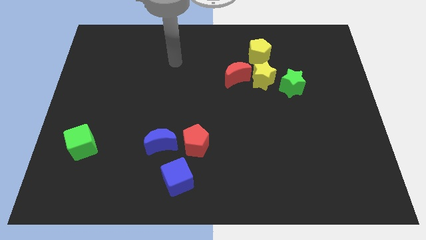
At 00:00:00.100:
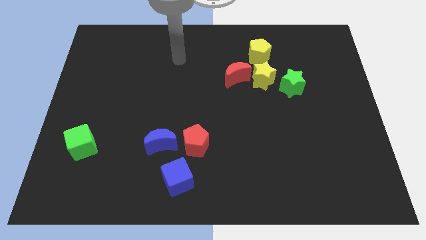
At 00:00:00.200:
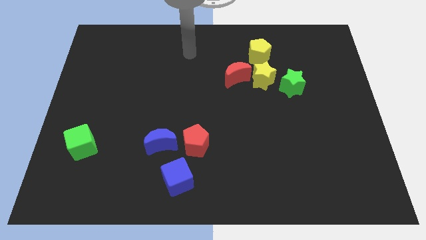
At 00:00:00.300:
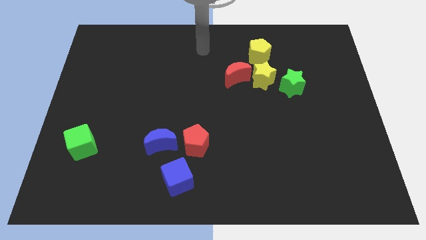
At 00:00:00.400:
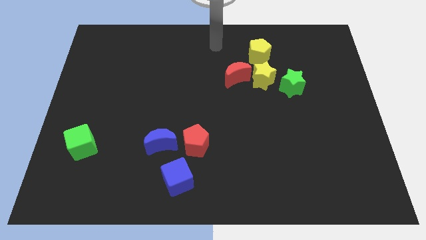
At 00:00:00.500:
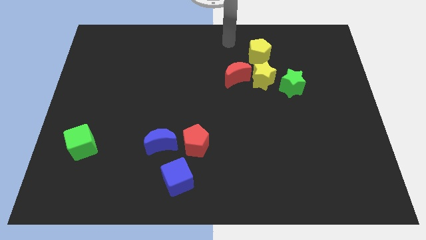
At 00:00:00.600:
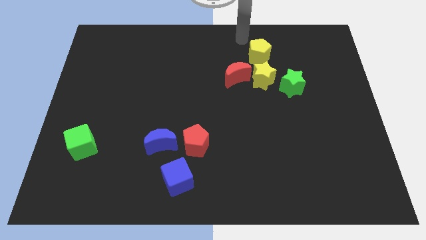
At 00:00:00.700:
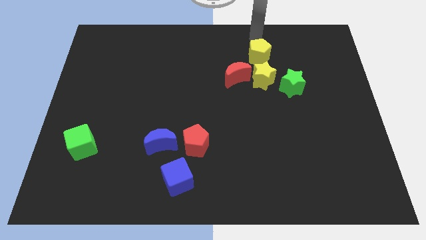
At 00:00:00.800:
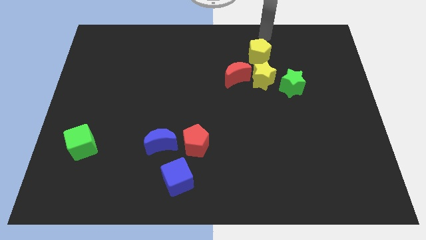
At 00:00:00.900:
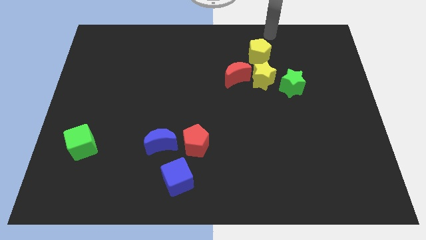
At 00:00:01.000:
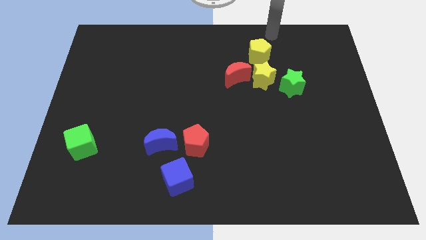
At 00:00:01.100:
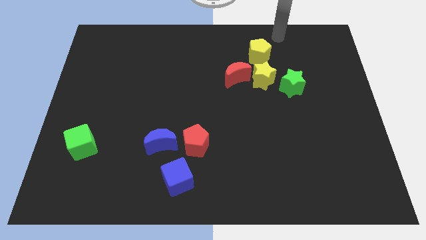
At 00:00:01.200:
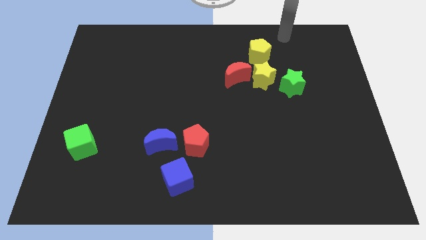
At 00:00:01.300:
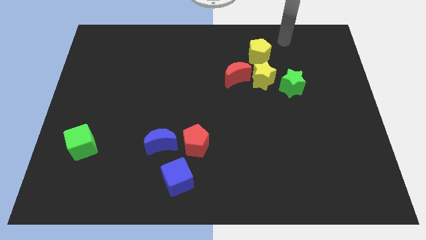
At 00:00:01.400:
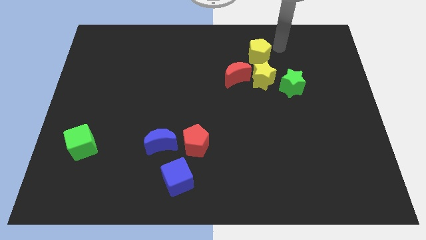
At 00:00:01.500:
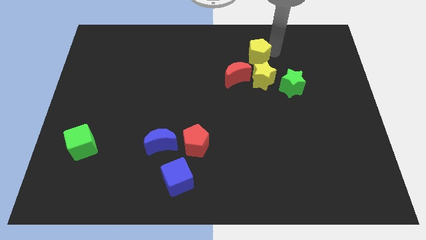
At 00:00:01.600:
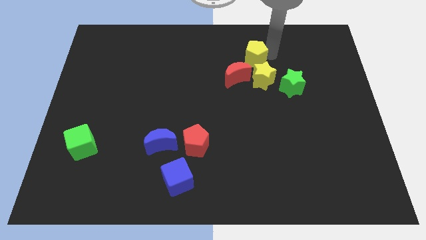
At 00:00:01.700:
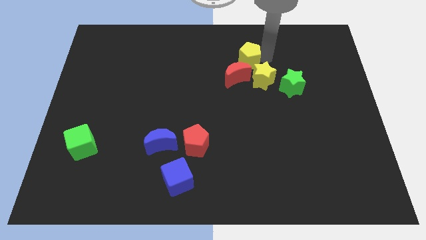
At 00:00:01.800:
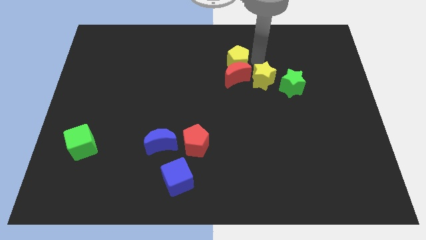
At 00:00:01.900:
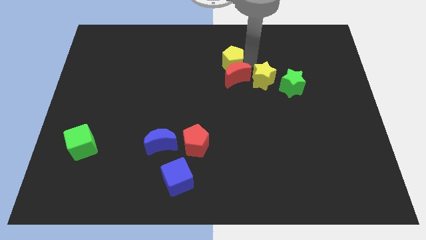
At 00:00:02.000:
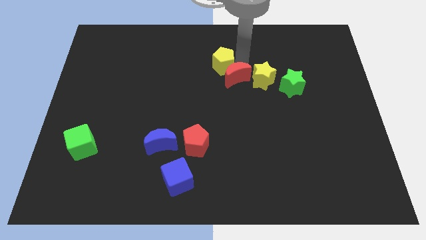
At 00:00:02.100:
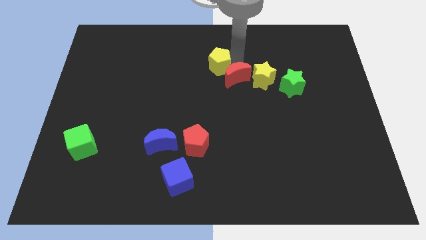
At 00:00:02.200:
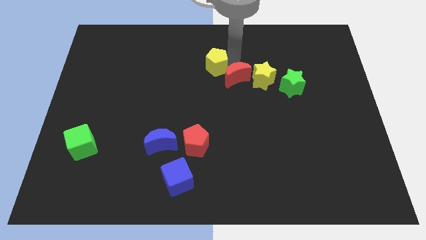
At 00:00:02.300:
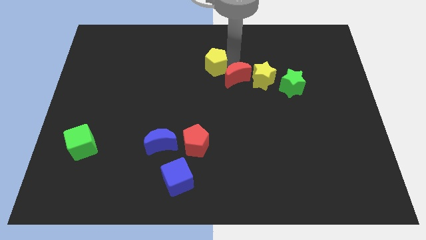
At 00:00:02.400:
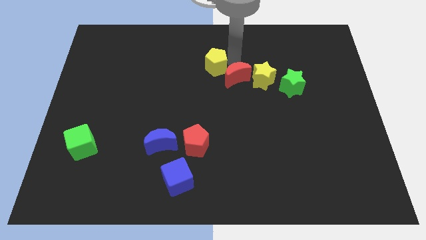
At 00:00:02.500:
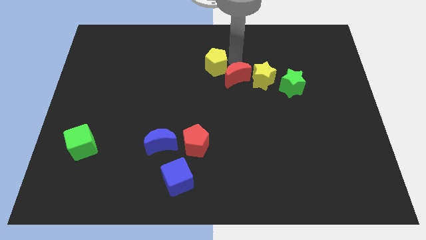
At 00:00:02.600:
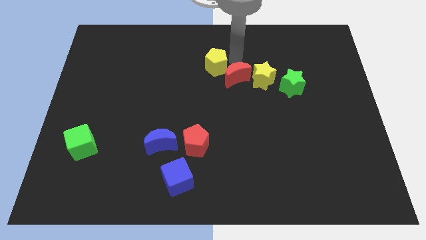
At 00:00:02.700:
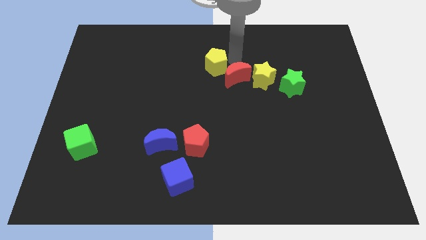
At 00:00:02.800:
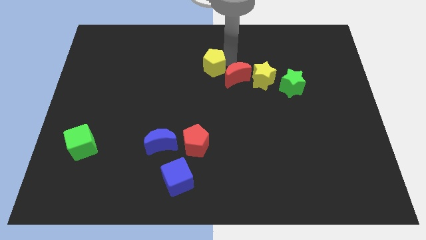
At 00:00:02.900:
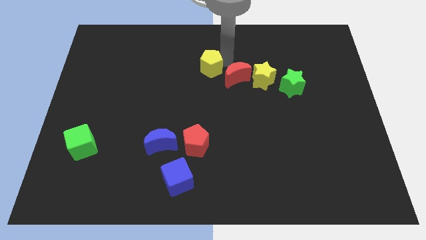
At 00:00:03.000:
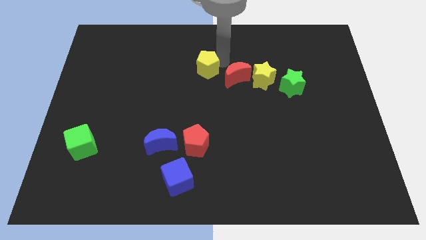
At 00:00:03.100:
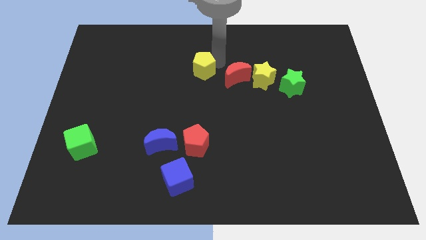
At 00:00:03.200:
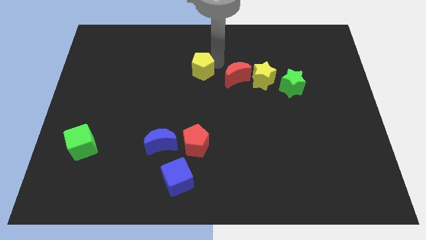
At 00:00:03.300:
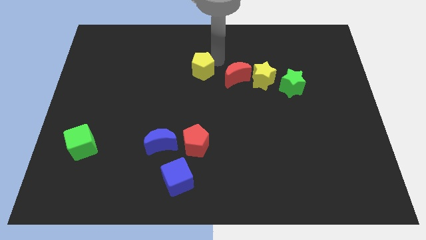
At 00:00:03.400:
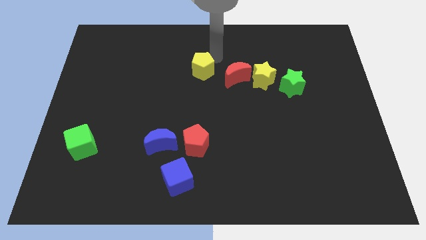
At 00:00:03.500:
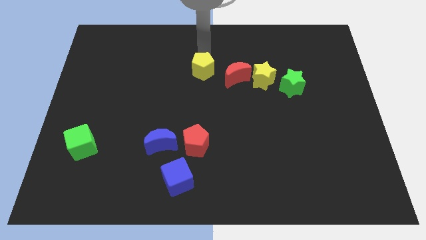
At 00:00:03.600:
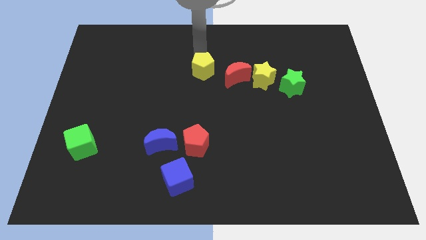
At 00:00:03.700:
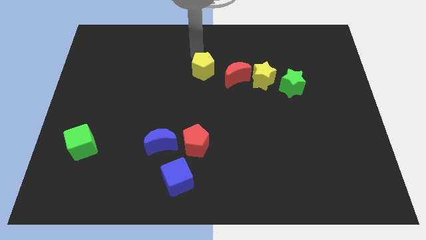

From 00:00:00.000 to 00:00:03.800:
move the yellow pentagon the top left of red moon

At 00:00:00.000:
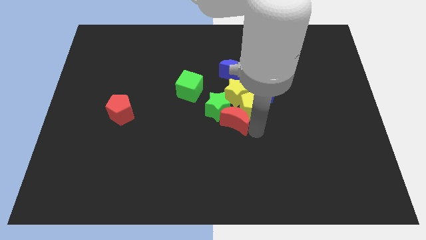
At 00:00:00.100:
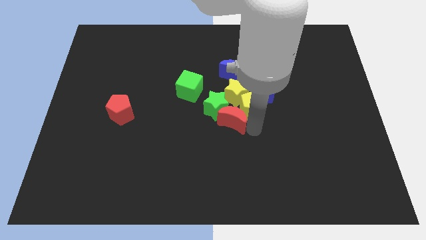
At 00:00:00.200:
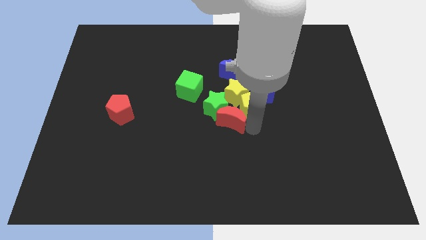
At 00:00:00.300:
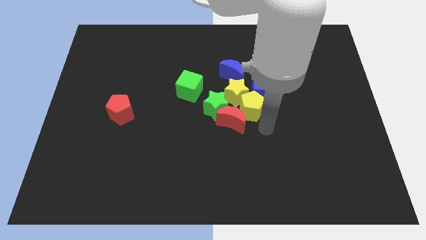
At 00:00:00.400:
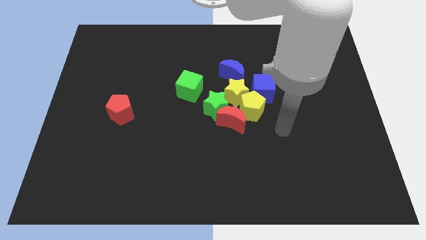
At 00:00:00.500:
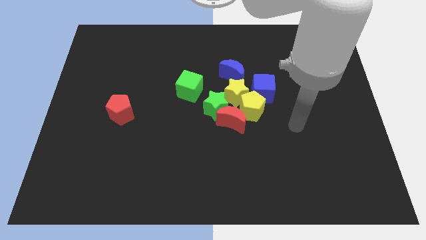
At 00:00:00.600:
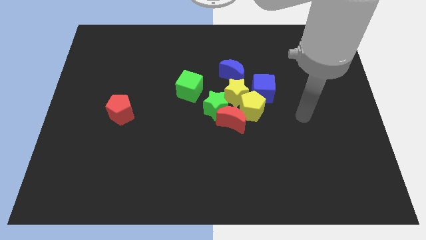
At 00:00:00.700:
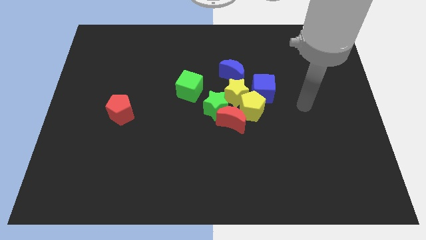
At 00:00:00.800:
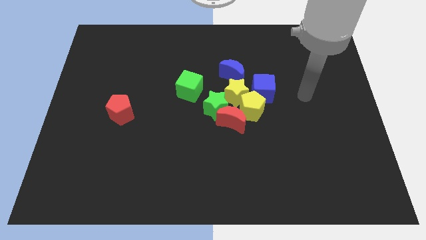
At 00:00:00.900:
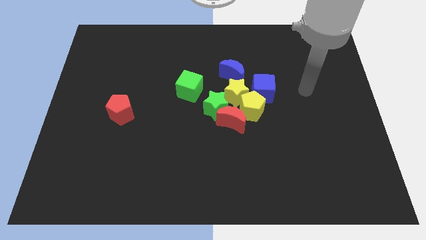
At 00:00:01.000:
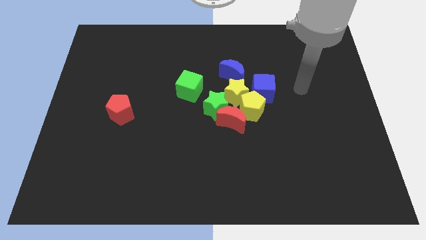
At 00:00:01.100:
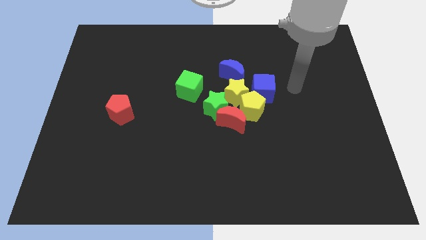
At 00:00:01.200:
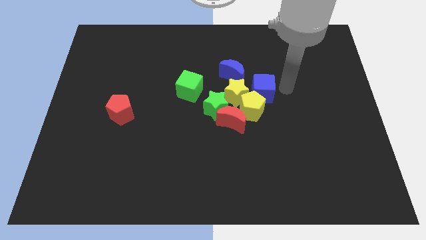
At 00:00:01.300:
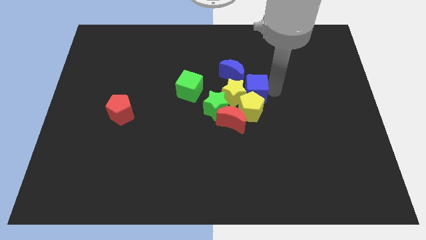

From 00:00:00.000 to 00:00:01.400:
move the red moon into green star

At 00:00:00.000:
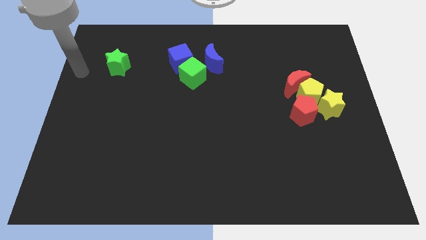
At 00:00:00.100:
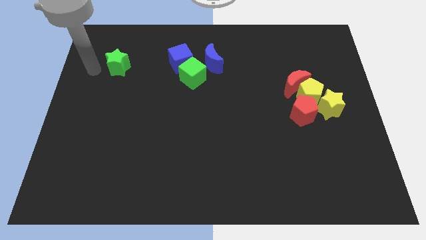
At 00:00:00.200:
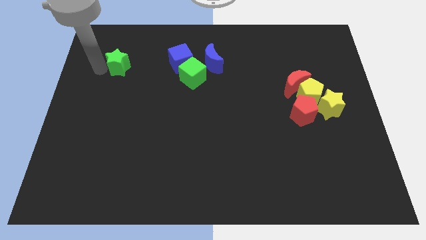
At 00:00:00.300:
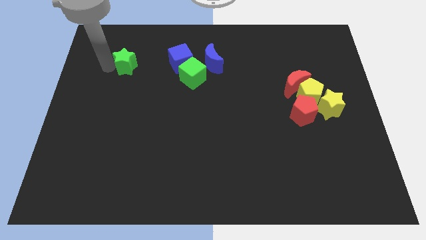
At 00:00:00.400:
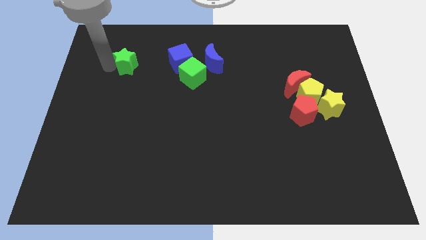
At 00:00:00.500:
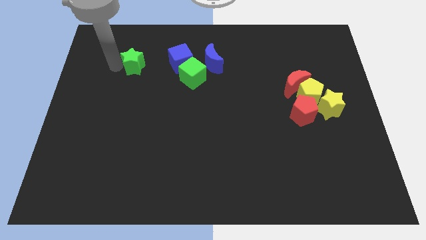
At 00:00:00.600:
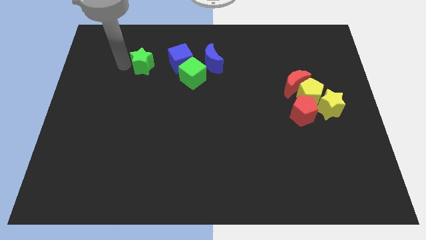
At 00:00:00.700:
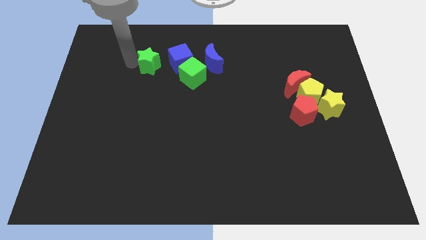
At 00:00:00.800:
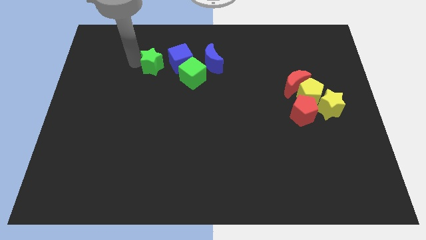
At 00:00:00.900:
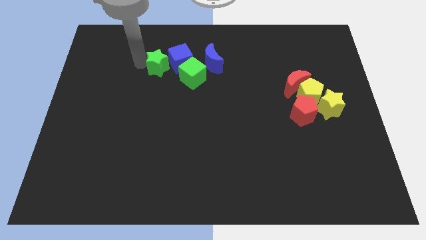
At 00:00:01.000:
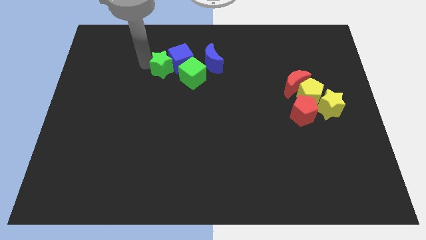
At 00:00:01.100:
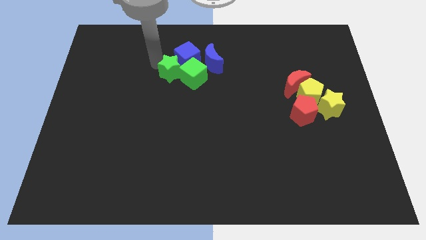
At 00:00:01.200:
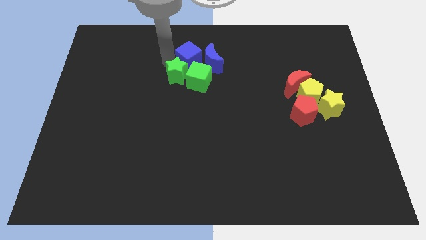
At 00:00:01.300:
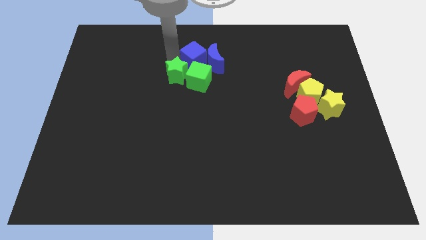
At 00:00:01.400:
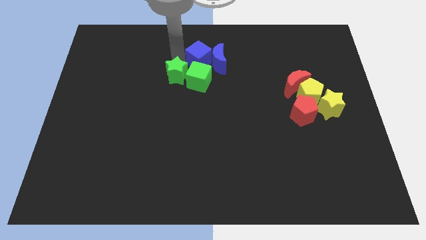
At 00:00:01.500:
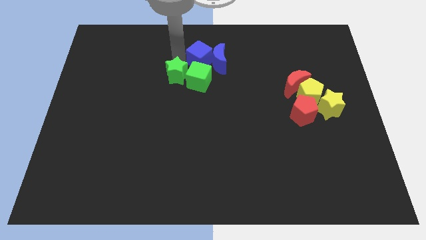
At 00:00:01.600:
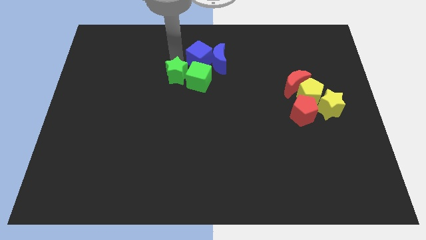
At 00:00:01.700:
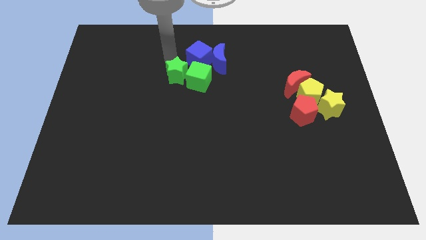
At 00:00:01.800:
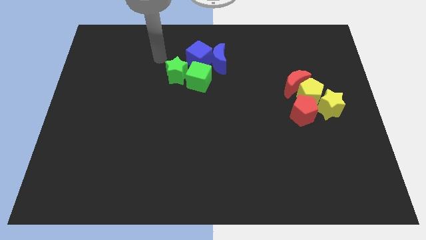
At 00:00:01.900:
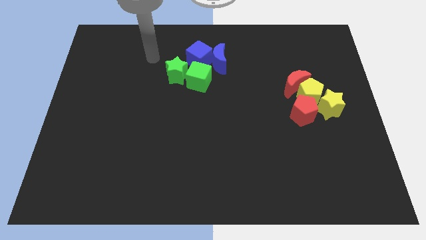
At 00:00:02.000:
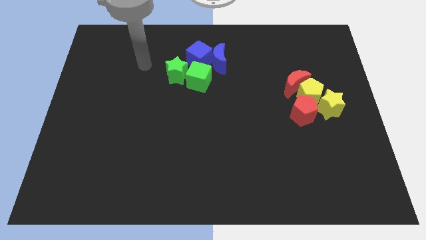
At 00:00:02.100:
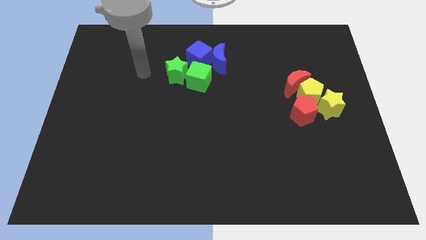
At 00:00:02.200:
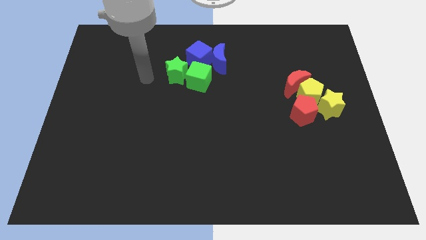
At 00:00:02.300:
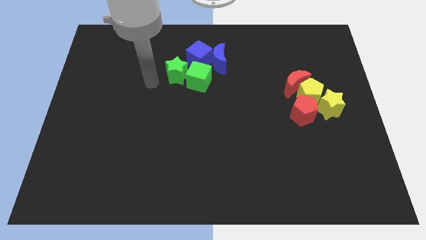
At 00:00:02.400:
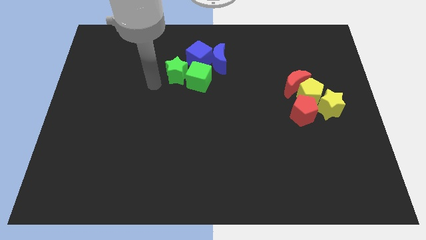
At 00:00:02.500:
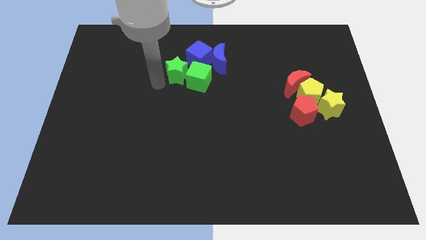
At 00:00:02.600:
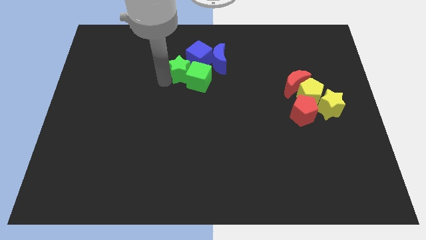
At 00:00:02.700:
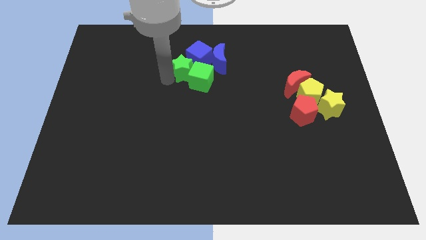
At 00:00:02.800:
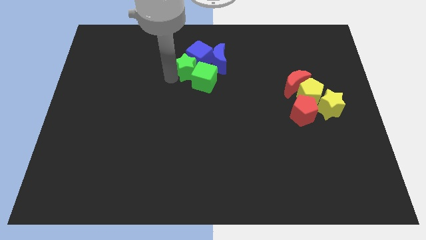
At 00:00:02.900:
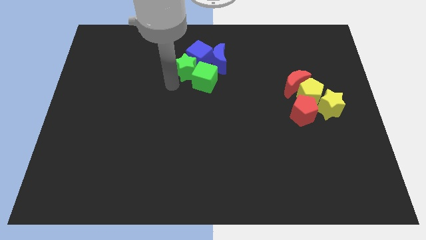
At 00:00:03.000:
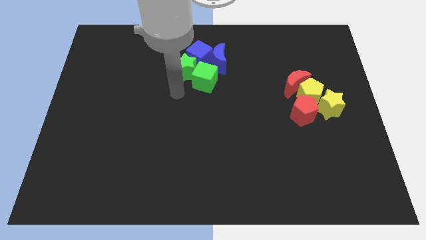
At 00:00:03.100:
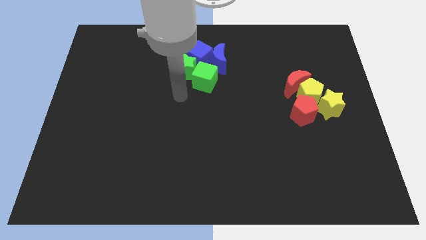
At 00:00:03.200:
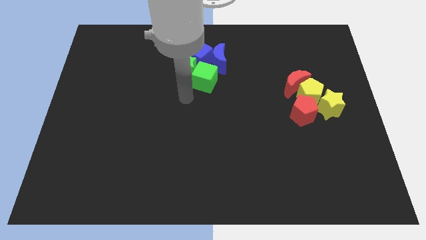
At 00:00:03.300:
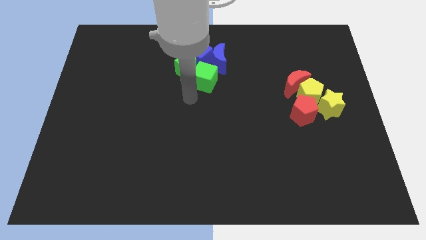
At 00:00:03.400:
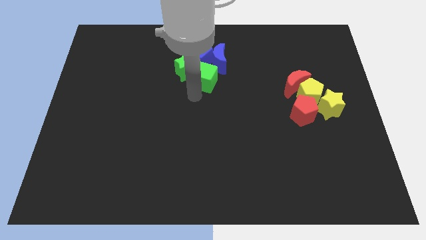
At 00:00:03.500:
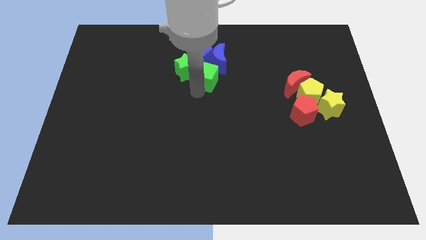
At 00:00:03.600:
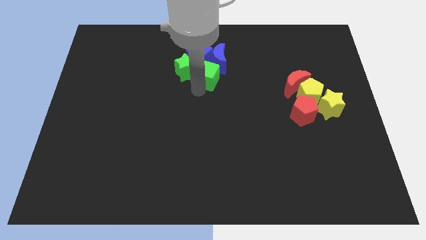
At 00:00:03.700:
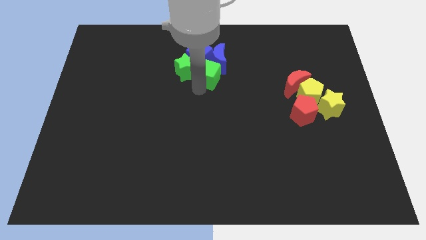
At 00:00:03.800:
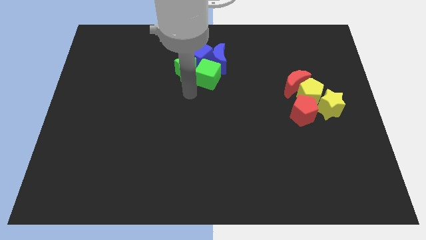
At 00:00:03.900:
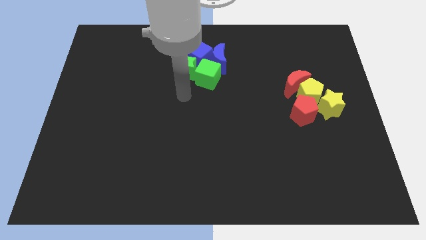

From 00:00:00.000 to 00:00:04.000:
push the green star into the group of blue blocks and green cube
